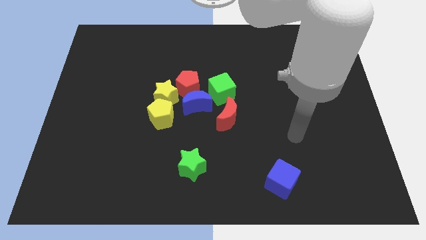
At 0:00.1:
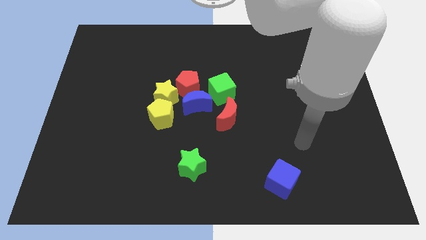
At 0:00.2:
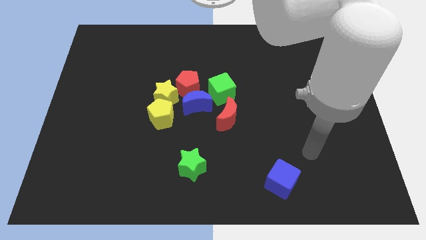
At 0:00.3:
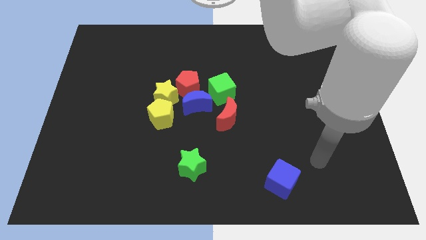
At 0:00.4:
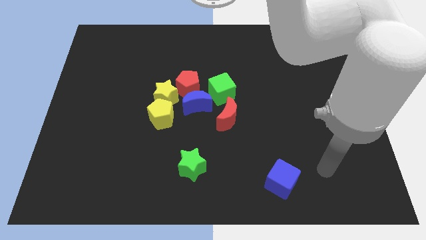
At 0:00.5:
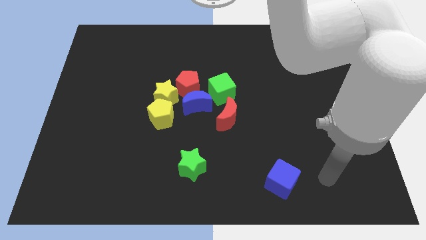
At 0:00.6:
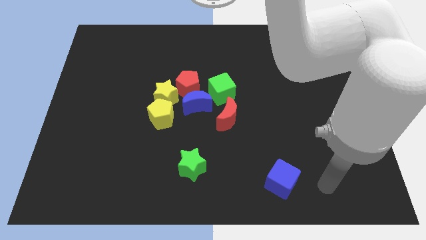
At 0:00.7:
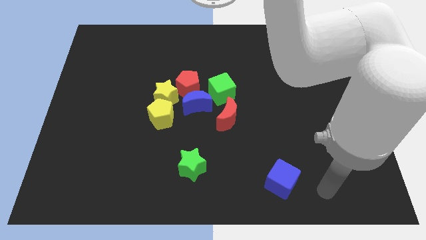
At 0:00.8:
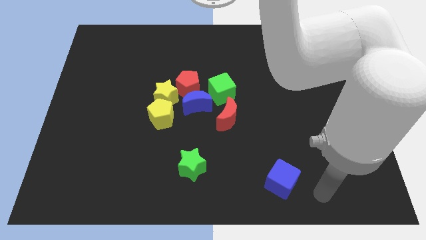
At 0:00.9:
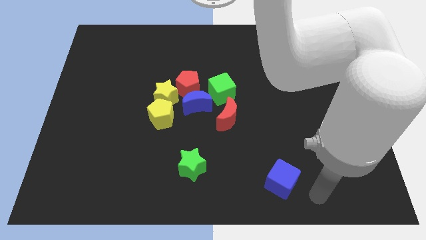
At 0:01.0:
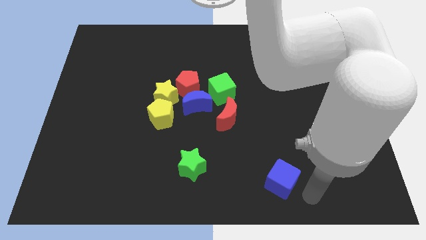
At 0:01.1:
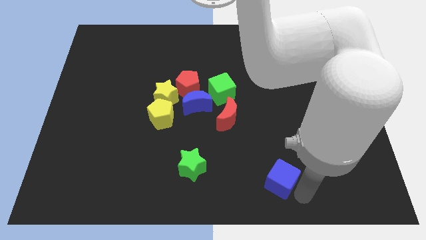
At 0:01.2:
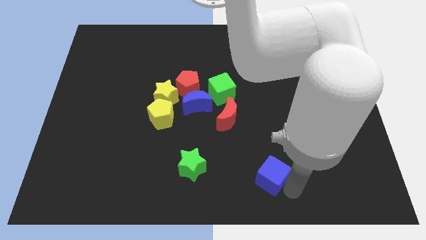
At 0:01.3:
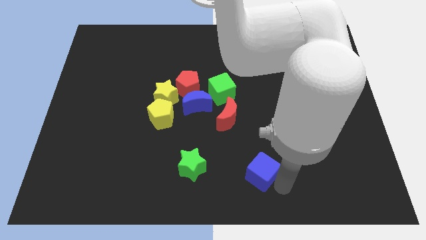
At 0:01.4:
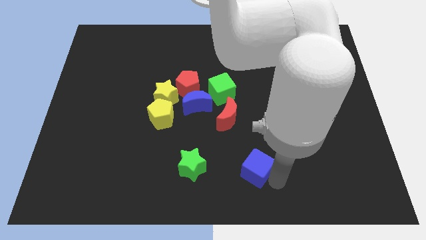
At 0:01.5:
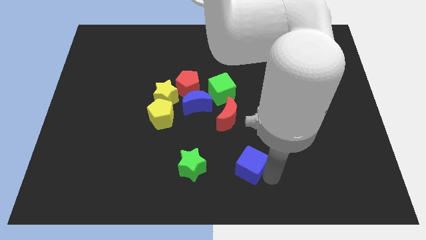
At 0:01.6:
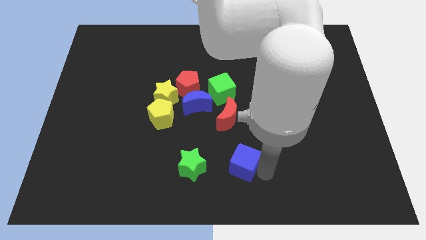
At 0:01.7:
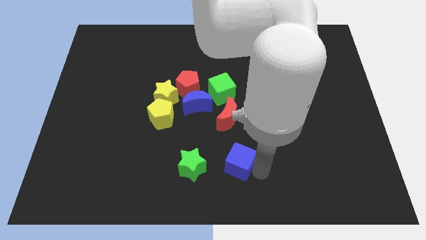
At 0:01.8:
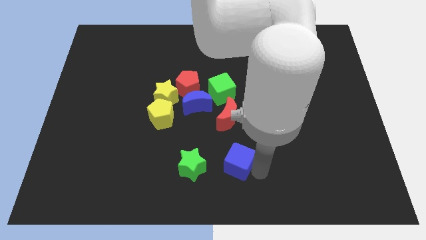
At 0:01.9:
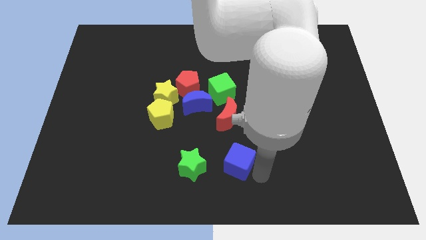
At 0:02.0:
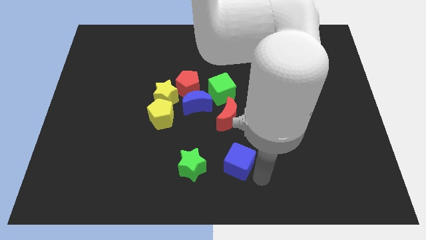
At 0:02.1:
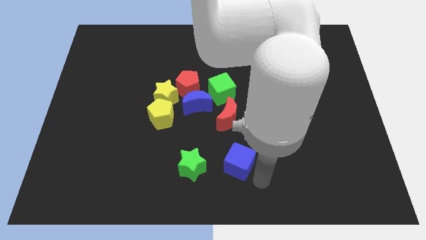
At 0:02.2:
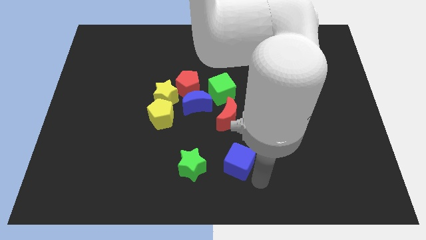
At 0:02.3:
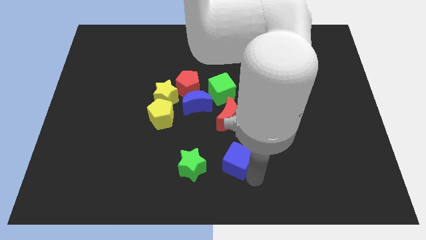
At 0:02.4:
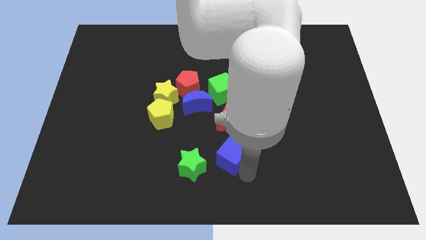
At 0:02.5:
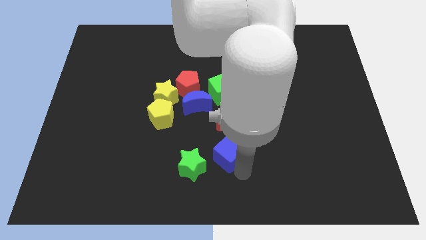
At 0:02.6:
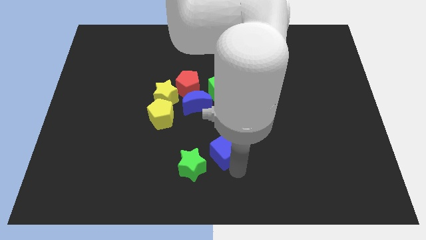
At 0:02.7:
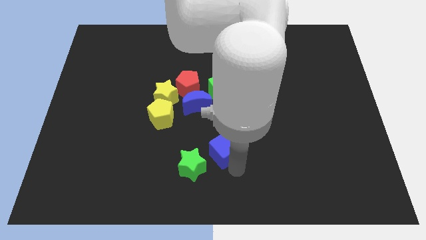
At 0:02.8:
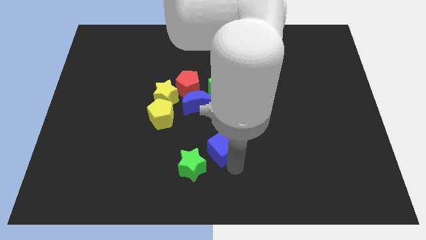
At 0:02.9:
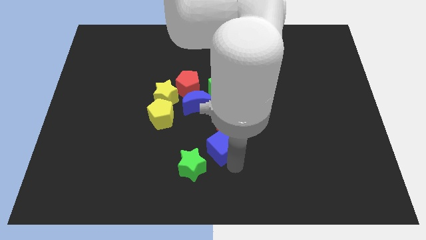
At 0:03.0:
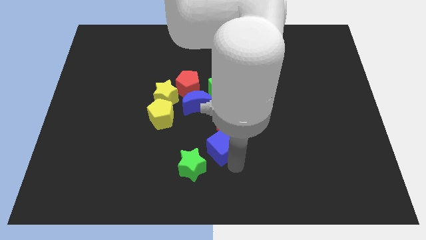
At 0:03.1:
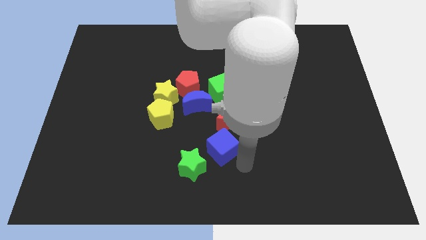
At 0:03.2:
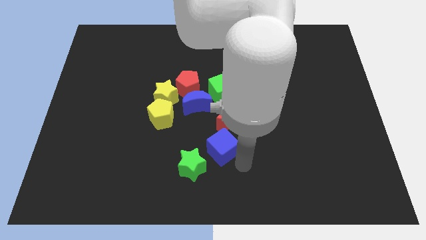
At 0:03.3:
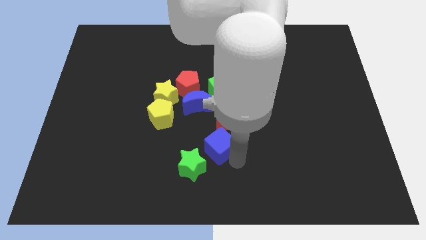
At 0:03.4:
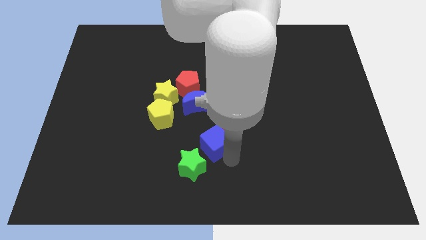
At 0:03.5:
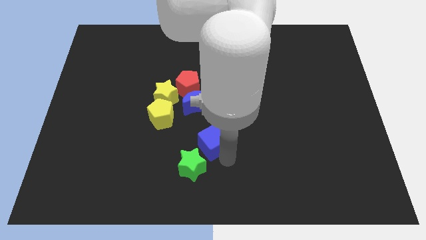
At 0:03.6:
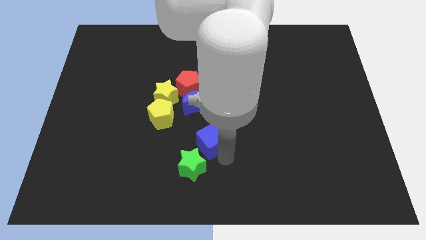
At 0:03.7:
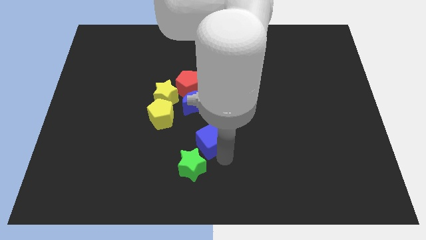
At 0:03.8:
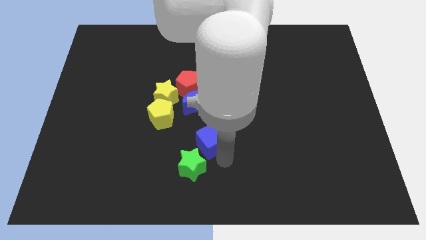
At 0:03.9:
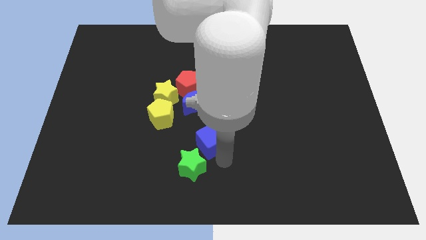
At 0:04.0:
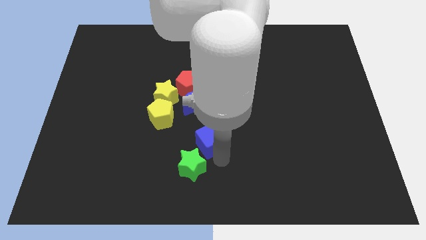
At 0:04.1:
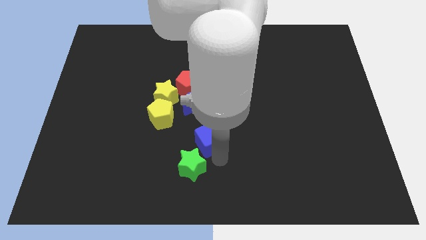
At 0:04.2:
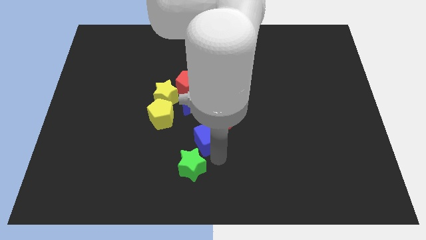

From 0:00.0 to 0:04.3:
place the blue cube towards the top right side of the green star

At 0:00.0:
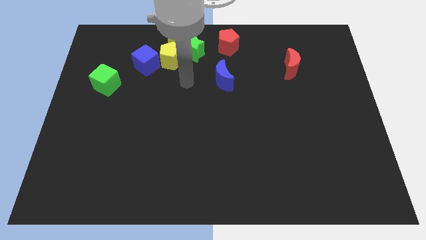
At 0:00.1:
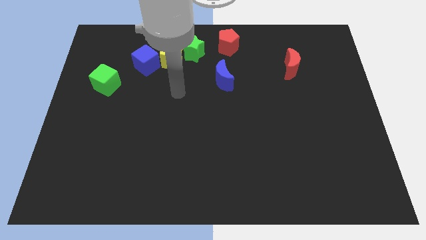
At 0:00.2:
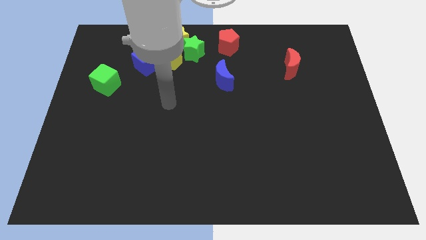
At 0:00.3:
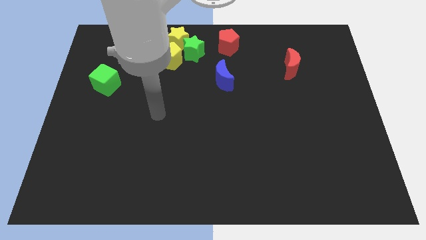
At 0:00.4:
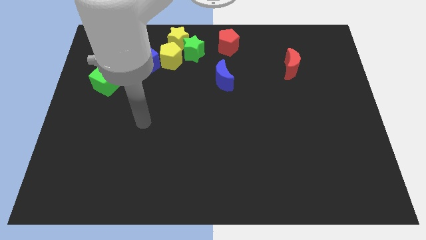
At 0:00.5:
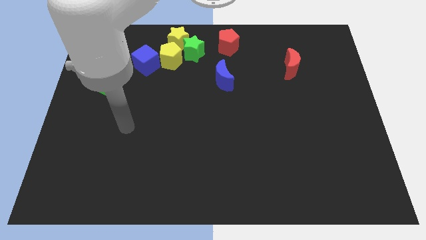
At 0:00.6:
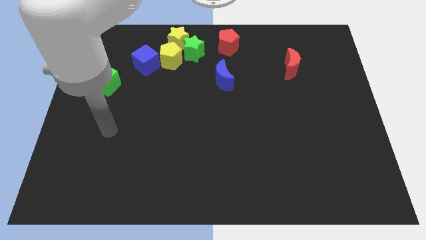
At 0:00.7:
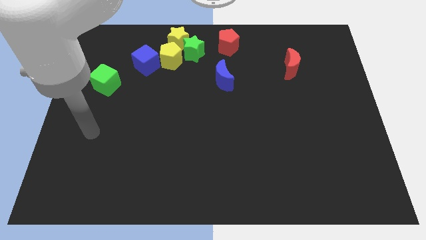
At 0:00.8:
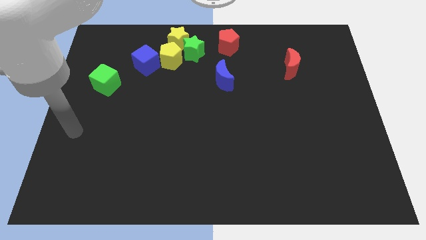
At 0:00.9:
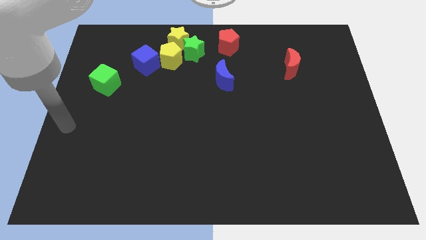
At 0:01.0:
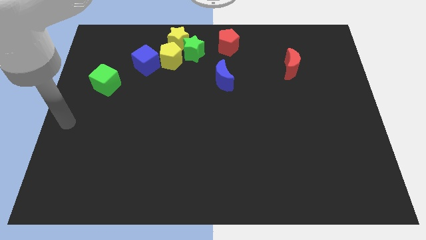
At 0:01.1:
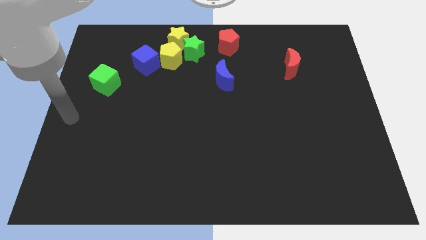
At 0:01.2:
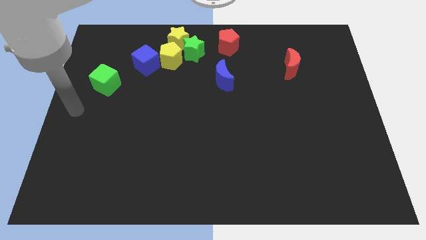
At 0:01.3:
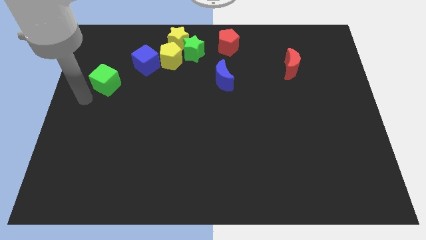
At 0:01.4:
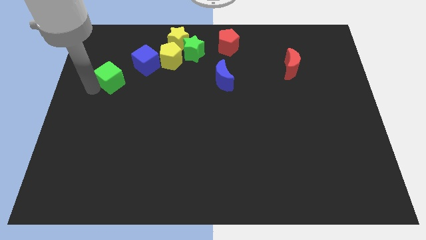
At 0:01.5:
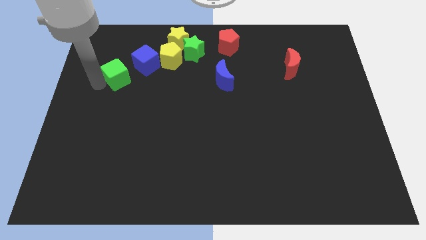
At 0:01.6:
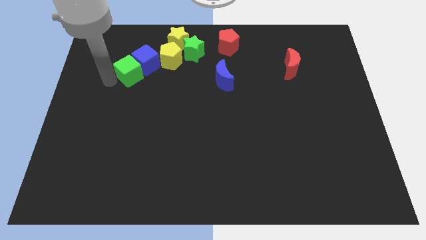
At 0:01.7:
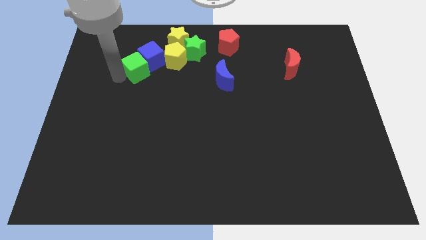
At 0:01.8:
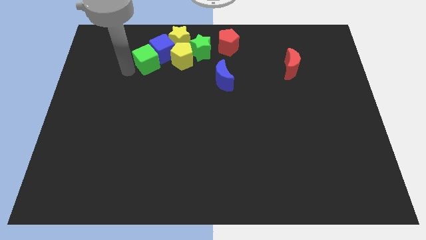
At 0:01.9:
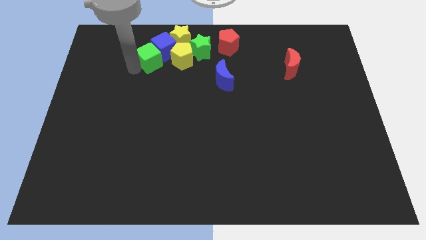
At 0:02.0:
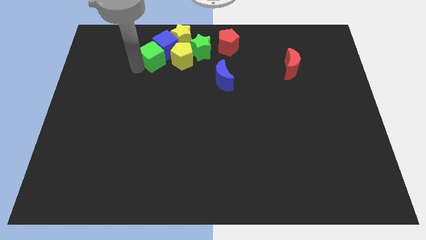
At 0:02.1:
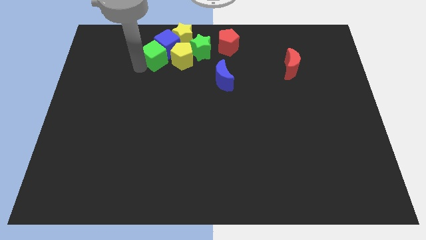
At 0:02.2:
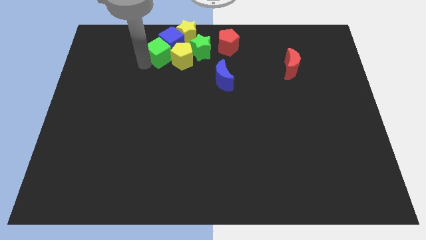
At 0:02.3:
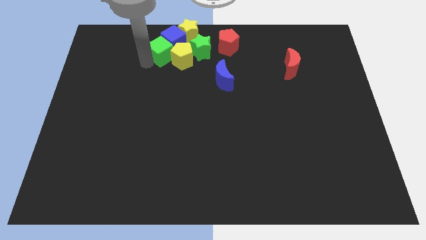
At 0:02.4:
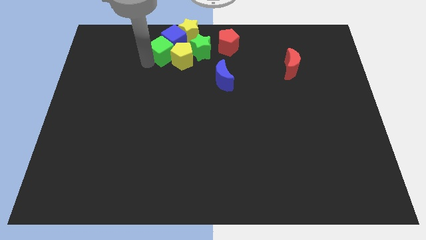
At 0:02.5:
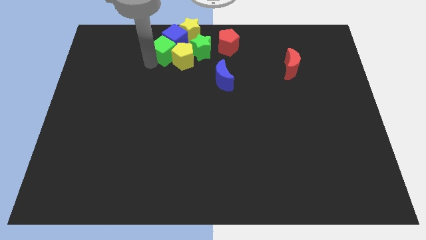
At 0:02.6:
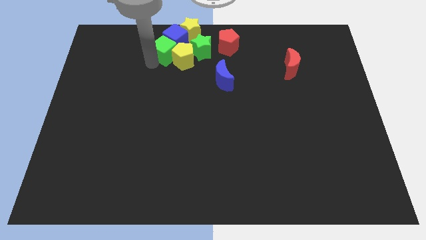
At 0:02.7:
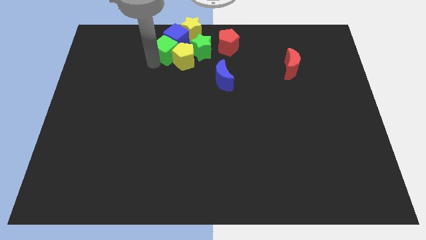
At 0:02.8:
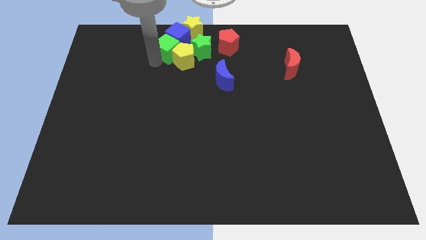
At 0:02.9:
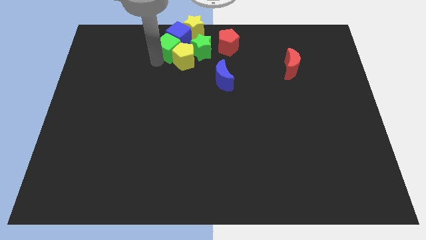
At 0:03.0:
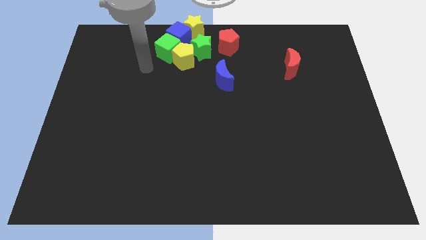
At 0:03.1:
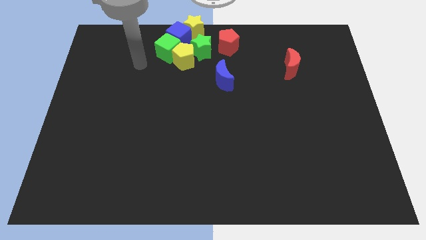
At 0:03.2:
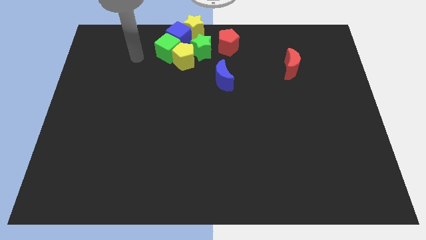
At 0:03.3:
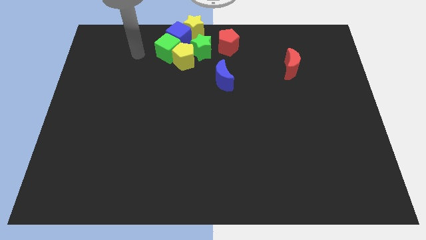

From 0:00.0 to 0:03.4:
move green cube into the blue cube

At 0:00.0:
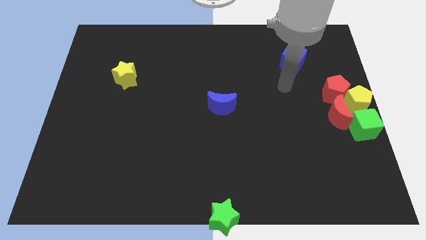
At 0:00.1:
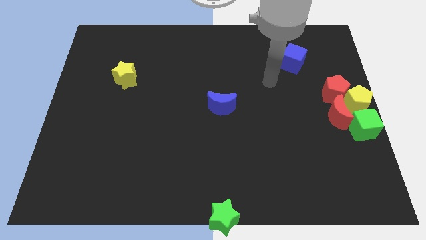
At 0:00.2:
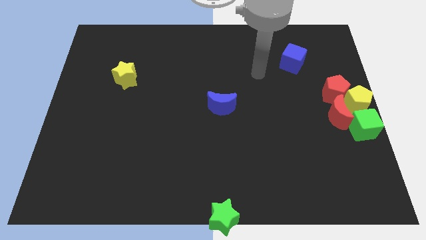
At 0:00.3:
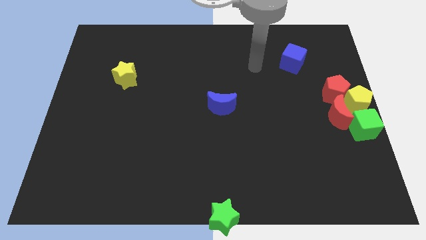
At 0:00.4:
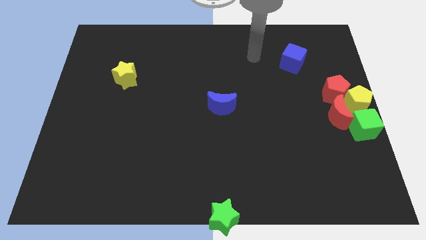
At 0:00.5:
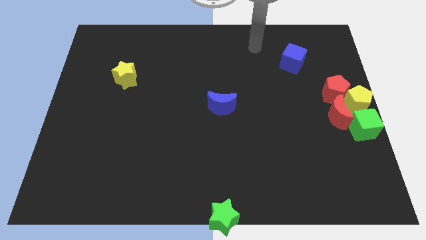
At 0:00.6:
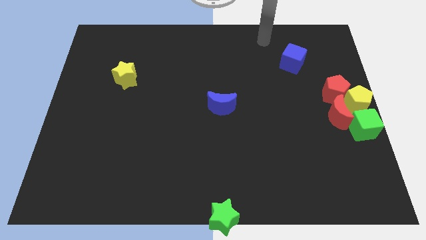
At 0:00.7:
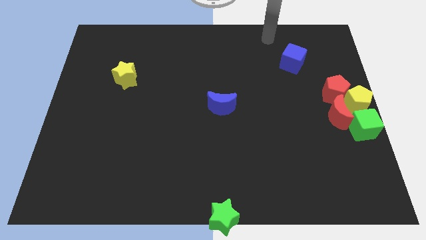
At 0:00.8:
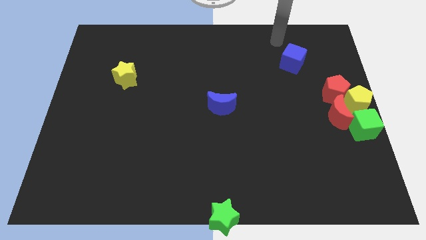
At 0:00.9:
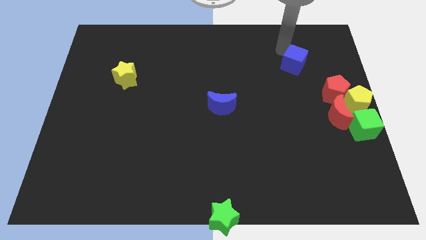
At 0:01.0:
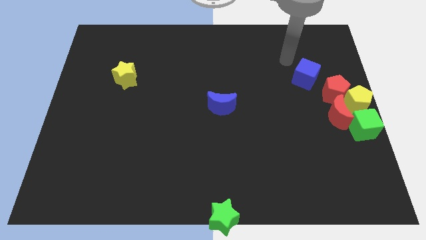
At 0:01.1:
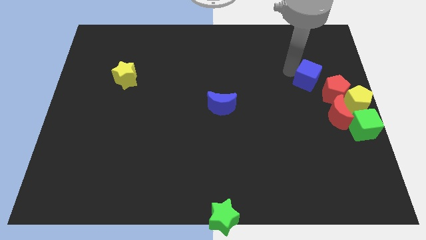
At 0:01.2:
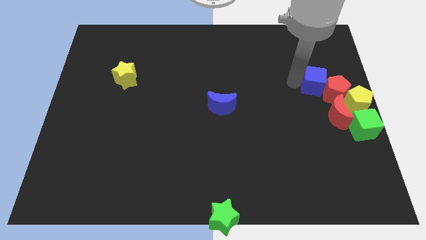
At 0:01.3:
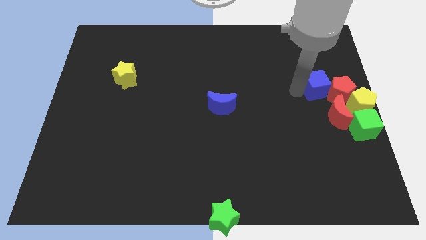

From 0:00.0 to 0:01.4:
push the blue cube towards the red pentagon
